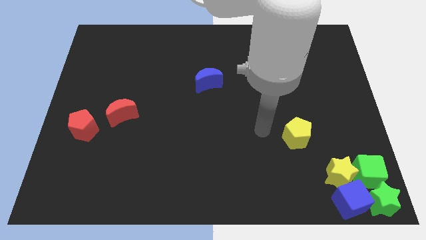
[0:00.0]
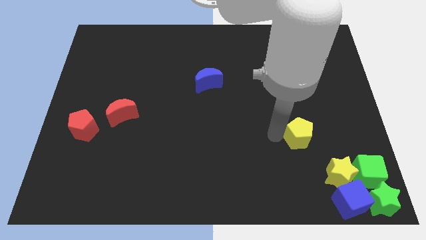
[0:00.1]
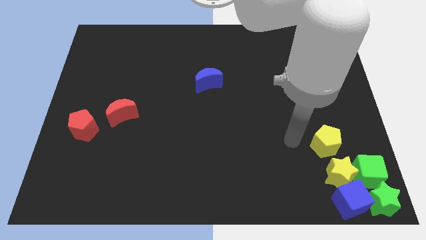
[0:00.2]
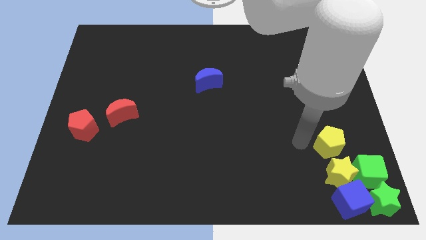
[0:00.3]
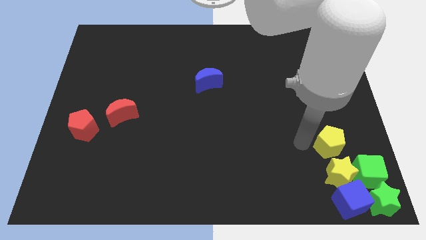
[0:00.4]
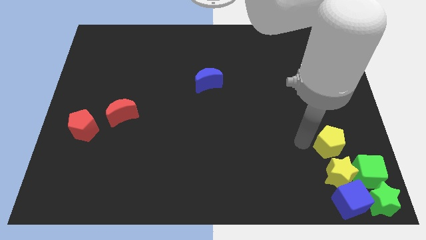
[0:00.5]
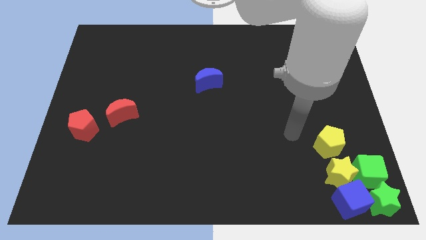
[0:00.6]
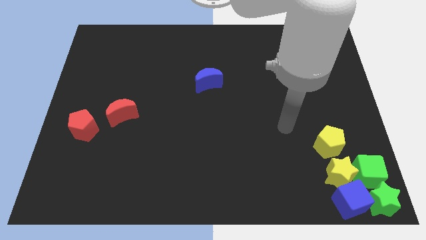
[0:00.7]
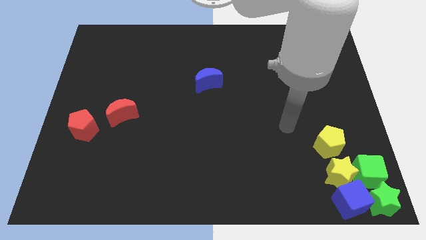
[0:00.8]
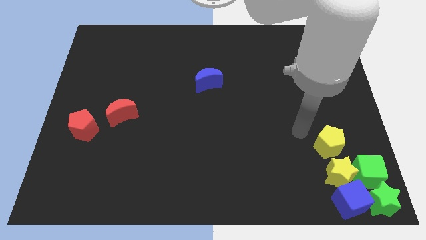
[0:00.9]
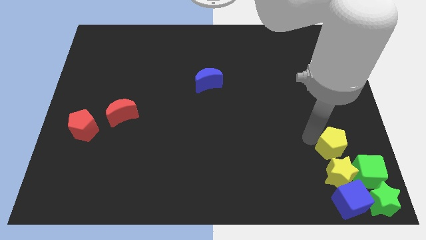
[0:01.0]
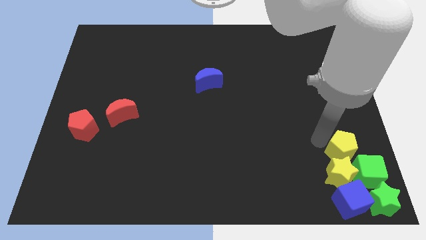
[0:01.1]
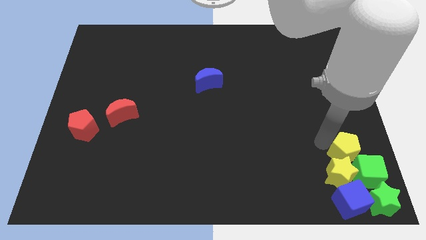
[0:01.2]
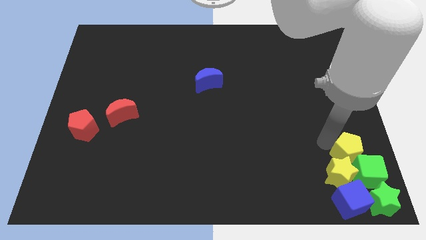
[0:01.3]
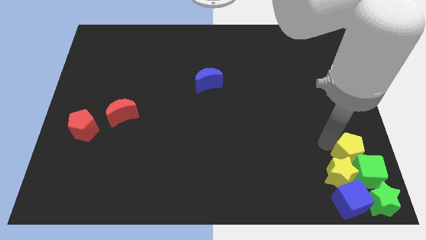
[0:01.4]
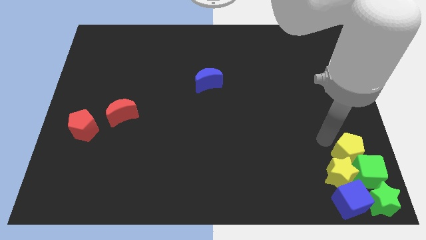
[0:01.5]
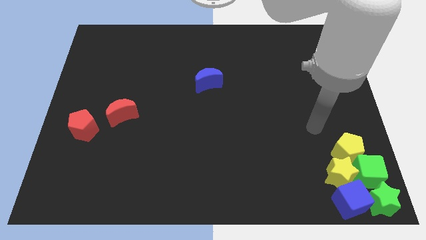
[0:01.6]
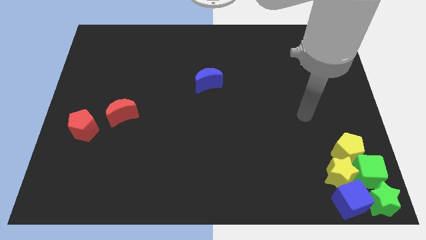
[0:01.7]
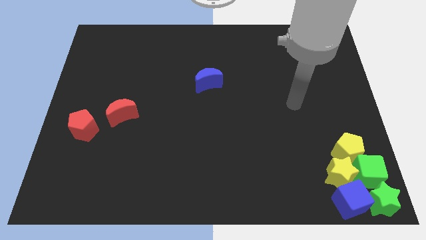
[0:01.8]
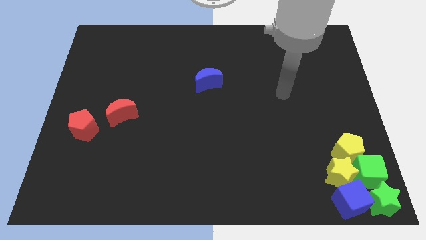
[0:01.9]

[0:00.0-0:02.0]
move the yellow pentagon into the group of blocks

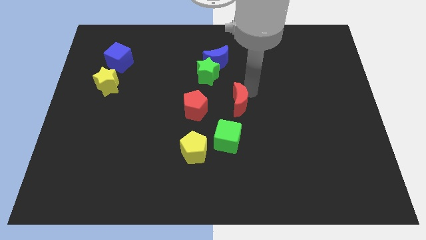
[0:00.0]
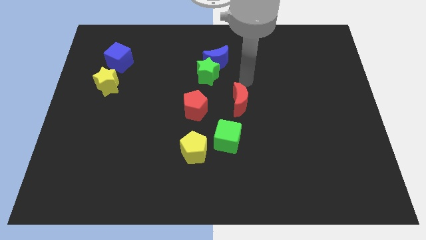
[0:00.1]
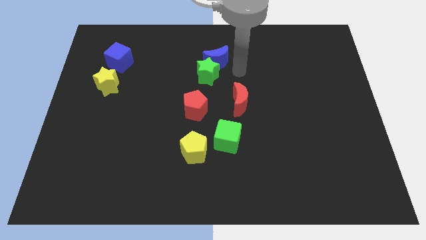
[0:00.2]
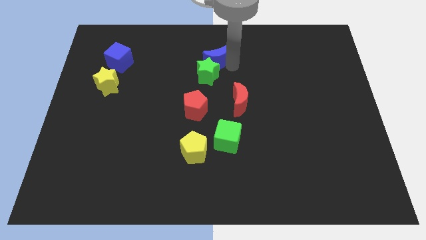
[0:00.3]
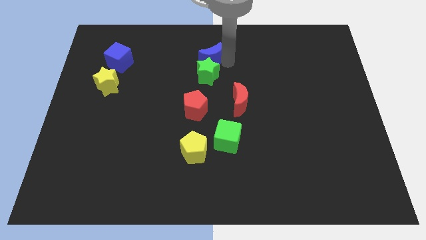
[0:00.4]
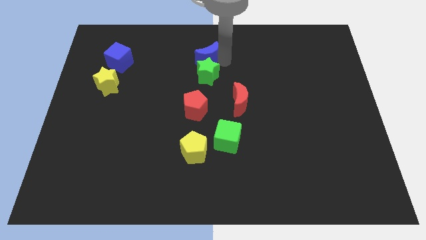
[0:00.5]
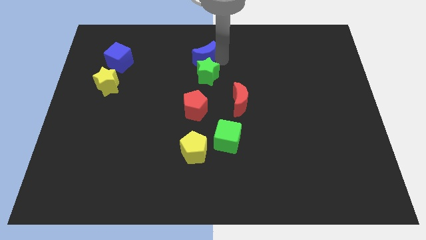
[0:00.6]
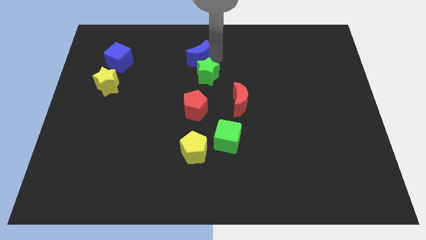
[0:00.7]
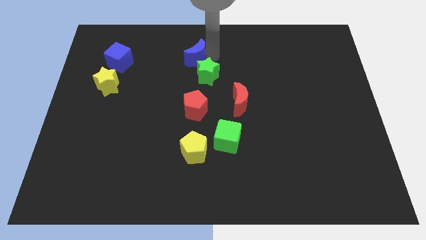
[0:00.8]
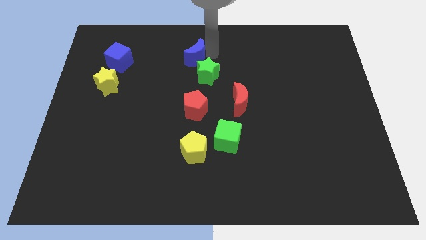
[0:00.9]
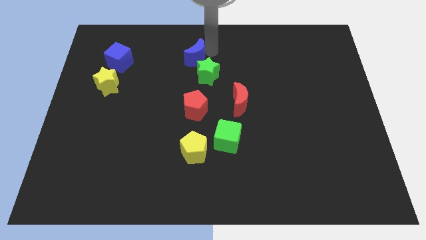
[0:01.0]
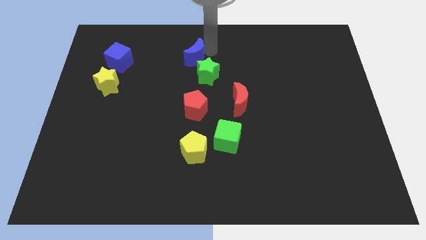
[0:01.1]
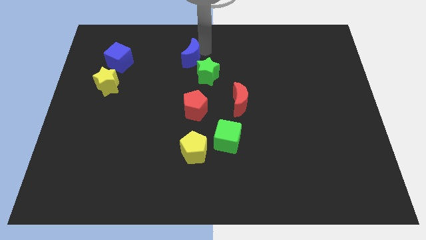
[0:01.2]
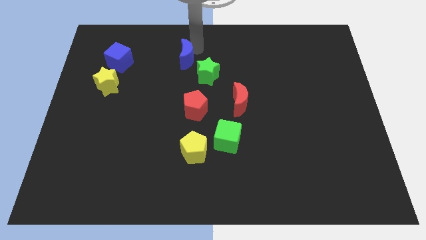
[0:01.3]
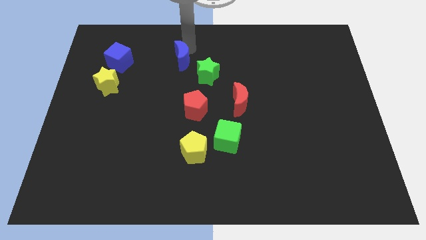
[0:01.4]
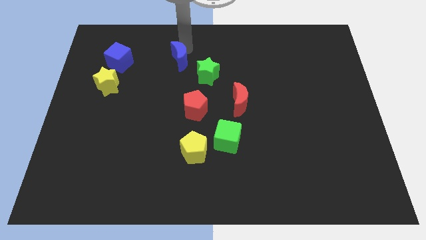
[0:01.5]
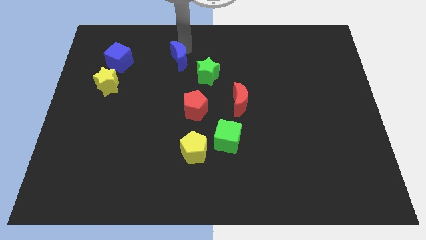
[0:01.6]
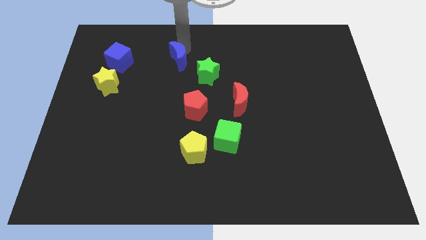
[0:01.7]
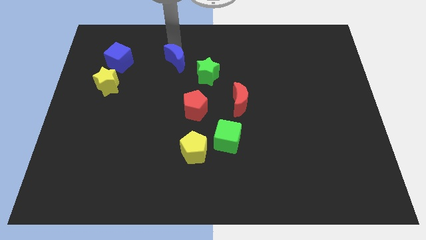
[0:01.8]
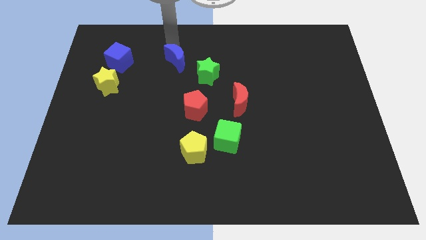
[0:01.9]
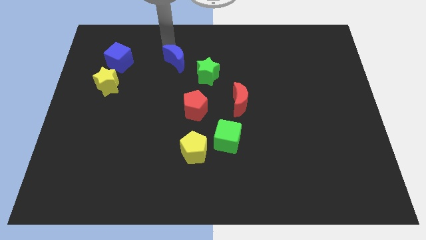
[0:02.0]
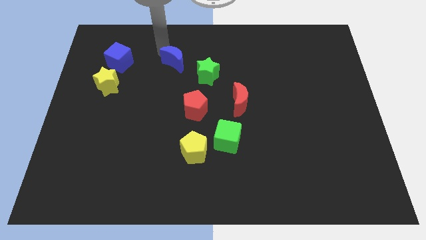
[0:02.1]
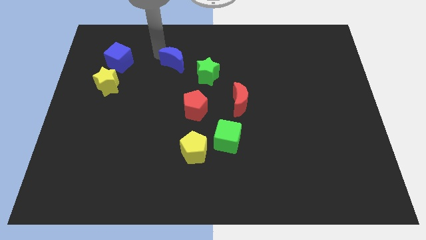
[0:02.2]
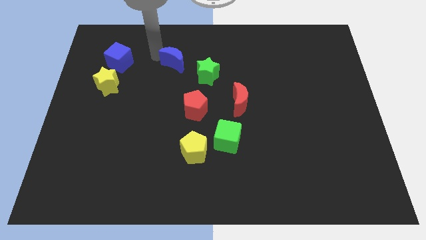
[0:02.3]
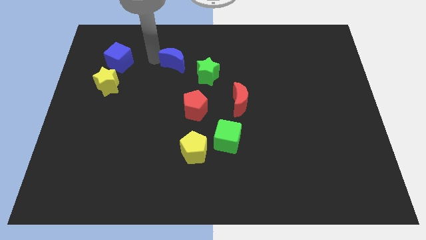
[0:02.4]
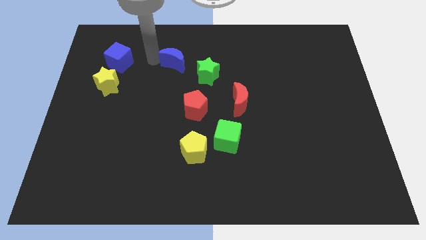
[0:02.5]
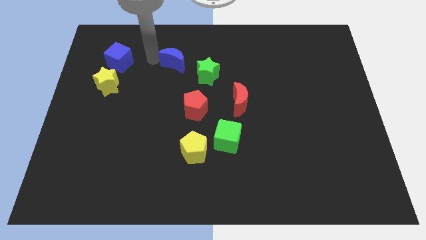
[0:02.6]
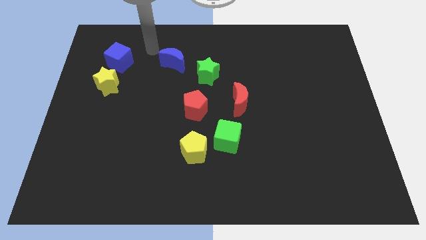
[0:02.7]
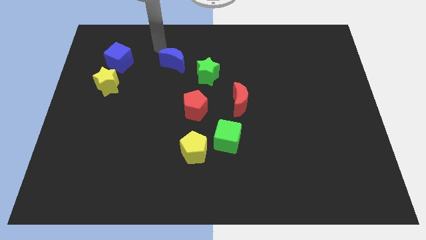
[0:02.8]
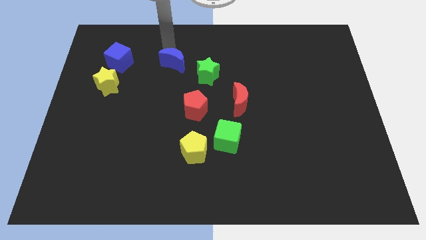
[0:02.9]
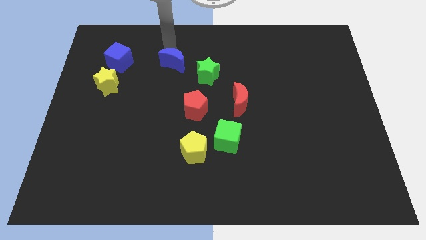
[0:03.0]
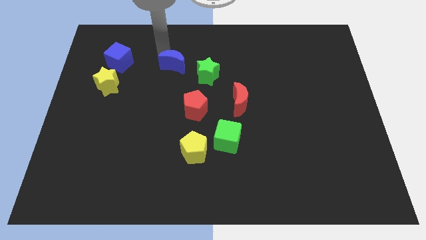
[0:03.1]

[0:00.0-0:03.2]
move the blue moon slightly towards the left of the board

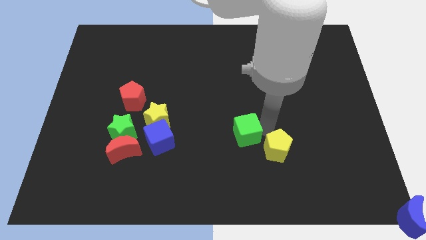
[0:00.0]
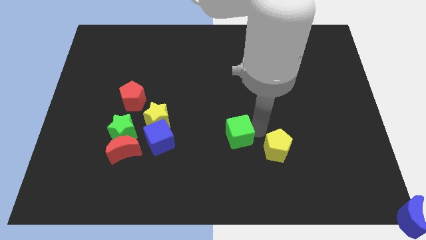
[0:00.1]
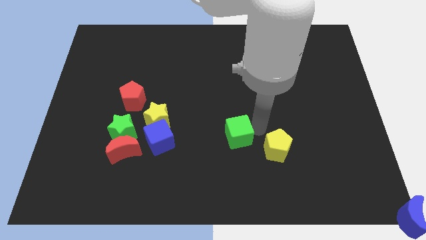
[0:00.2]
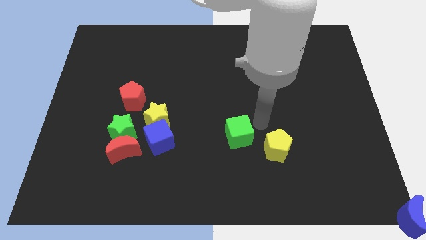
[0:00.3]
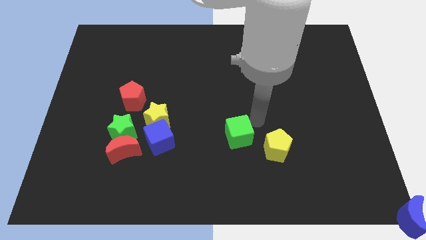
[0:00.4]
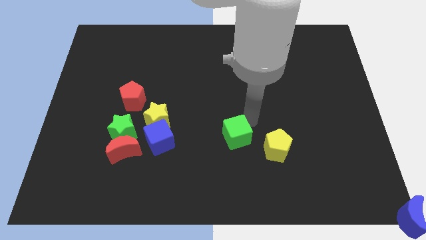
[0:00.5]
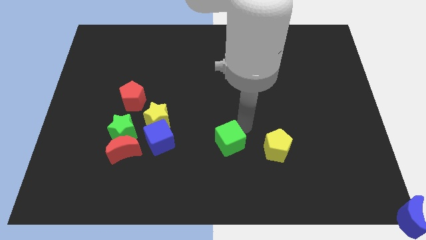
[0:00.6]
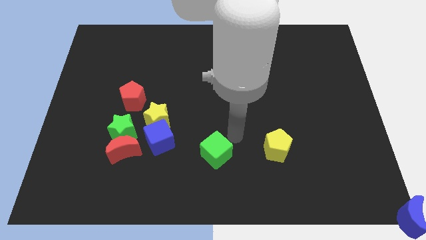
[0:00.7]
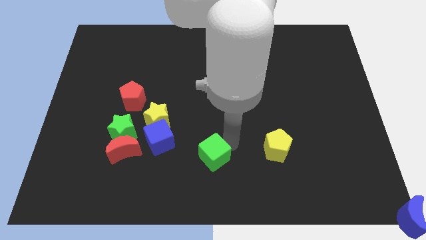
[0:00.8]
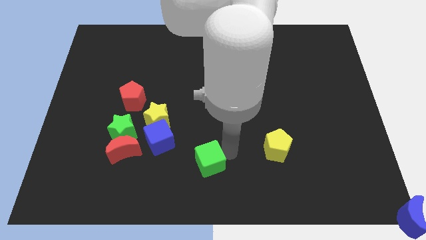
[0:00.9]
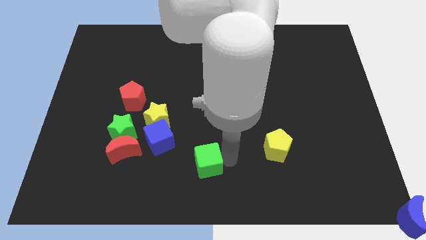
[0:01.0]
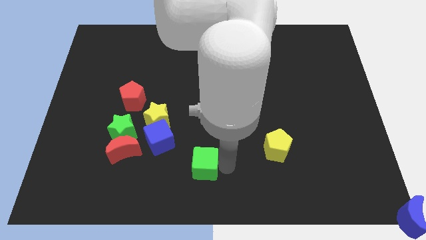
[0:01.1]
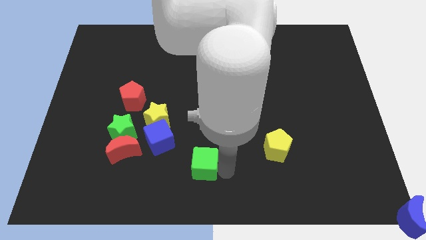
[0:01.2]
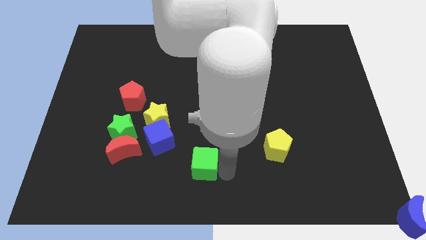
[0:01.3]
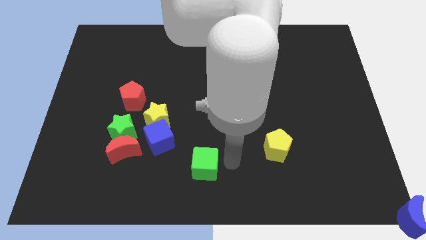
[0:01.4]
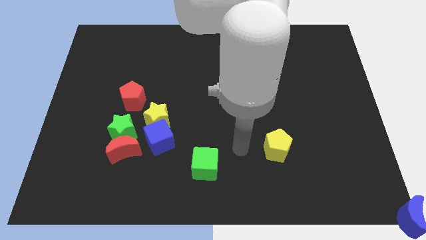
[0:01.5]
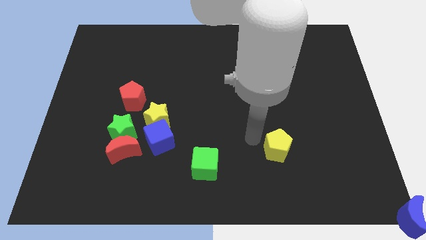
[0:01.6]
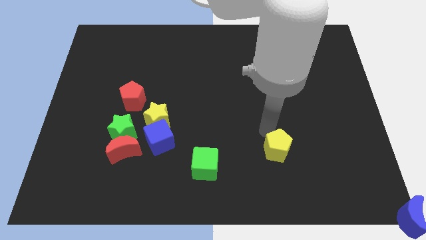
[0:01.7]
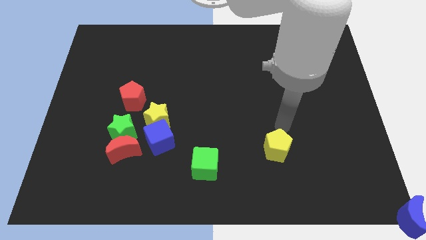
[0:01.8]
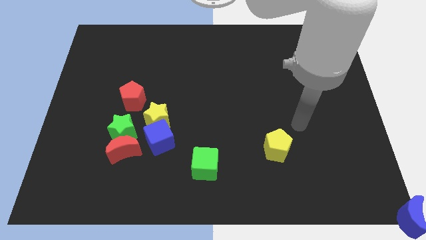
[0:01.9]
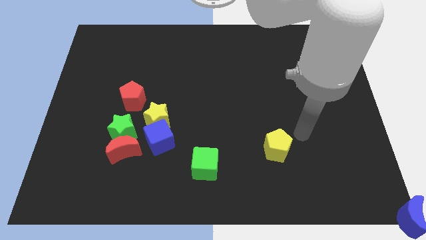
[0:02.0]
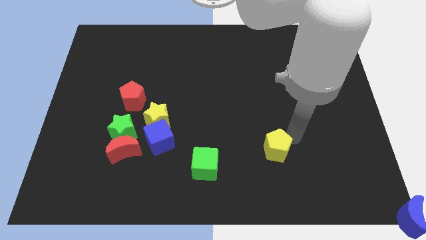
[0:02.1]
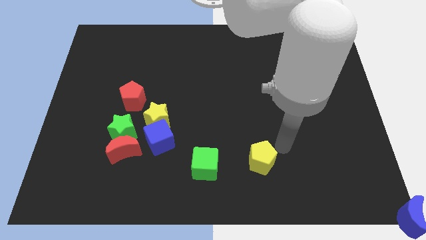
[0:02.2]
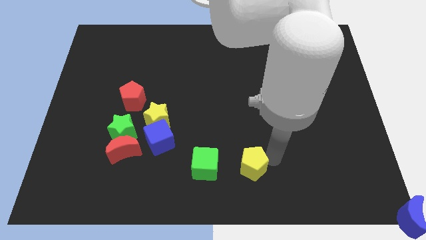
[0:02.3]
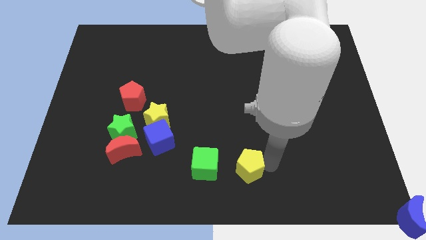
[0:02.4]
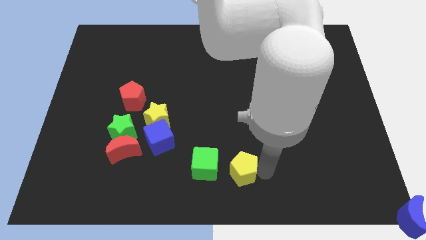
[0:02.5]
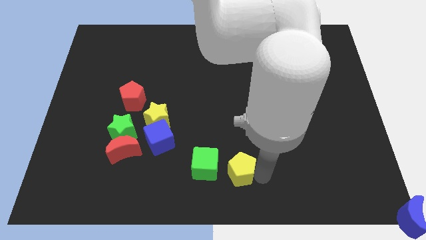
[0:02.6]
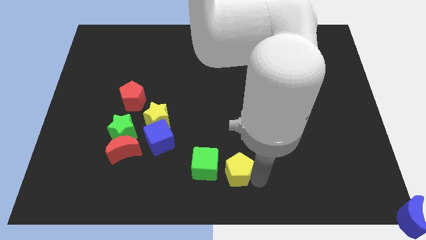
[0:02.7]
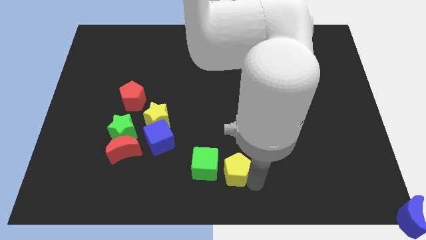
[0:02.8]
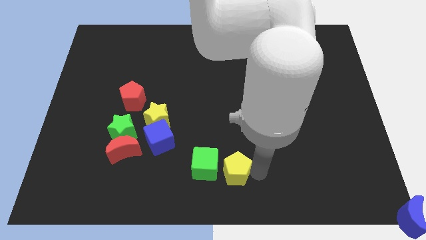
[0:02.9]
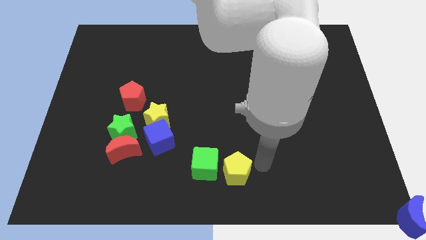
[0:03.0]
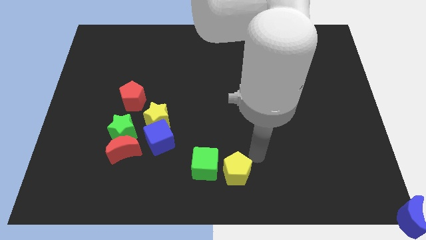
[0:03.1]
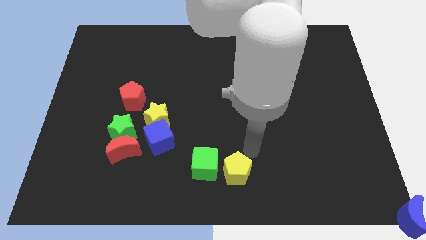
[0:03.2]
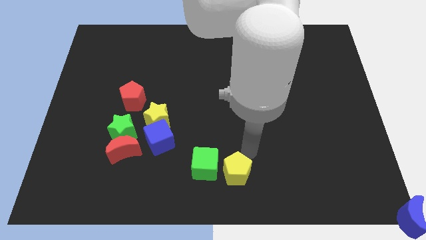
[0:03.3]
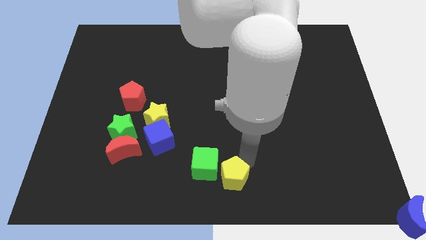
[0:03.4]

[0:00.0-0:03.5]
place the yellow pentagon right to the green cube

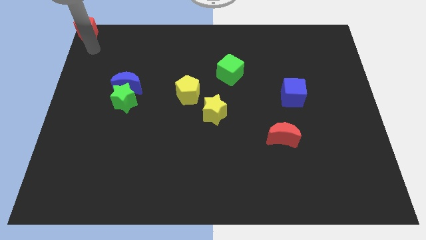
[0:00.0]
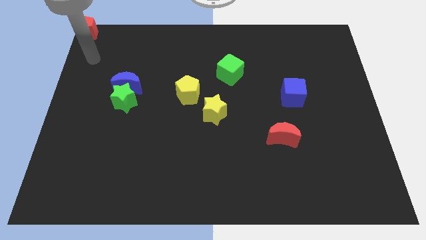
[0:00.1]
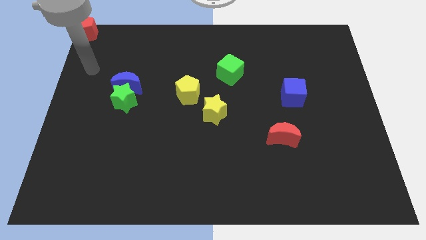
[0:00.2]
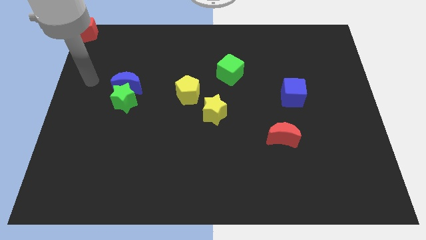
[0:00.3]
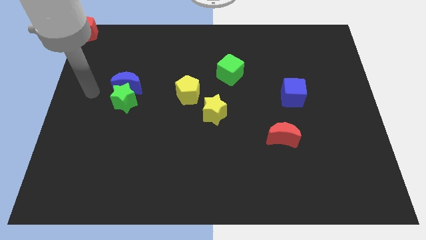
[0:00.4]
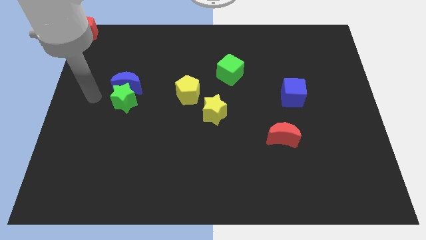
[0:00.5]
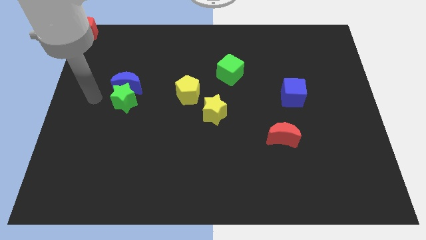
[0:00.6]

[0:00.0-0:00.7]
point your arm to the left side of green star
